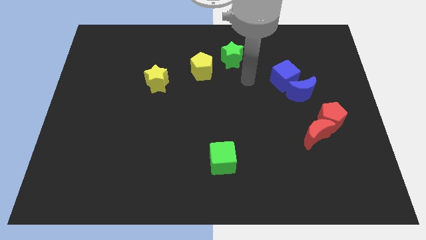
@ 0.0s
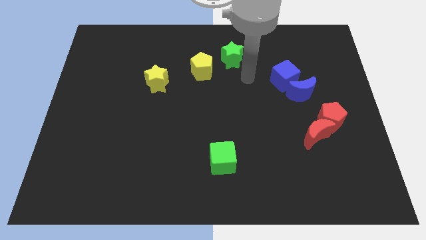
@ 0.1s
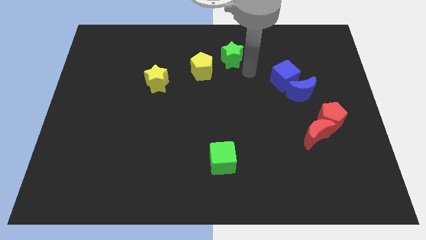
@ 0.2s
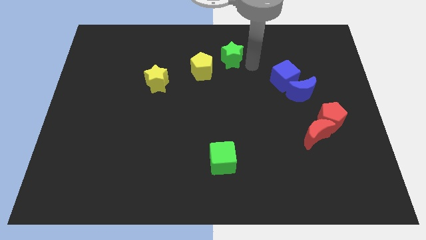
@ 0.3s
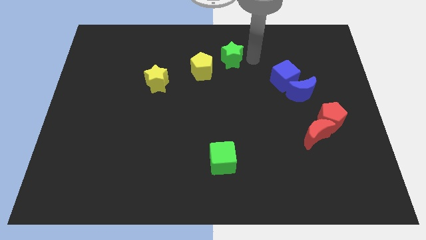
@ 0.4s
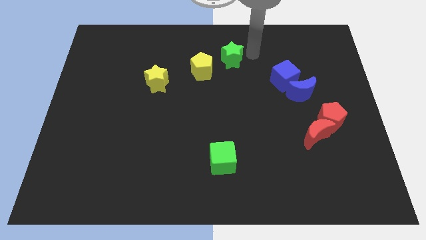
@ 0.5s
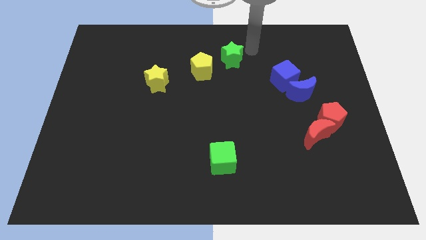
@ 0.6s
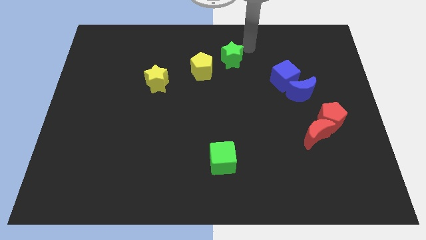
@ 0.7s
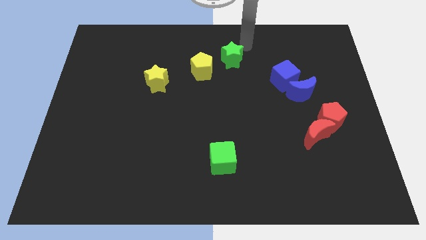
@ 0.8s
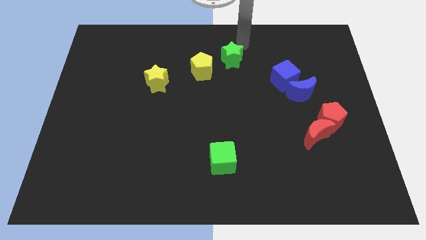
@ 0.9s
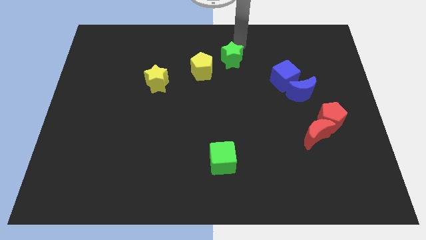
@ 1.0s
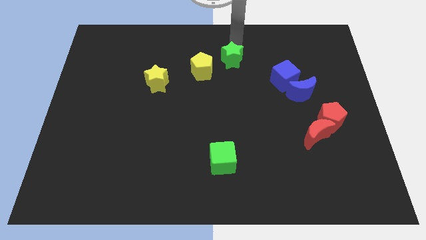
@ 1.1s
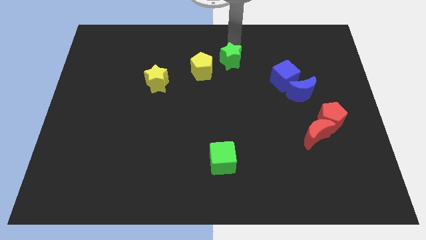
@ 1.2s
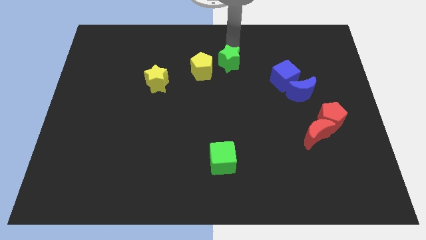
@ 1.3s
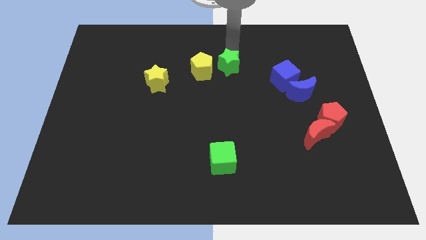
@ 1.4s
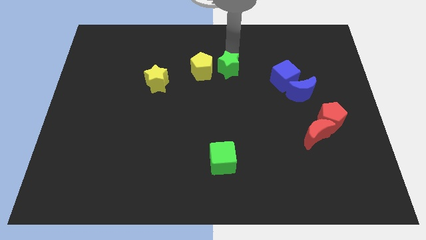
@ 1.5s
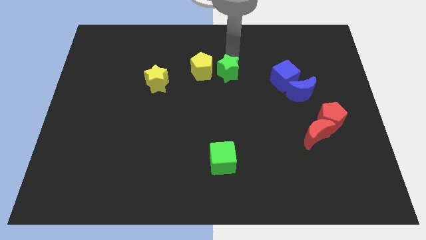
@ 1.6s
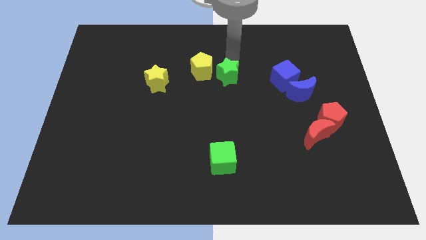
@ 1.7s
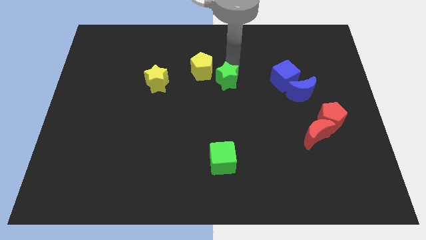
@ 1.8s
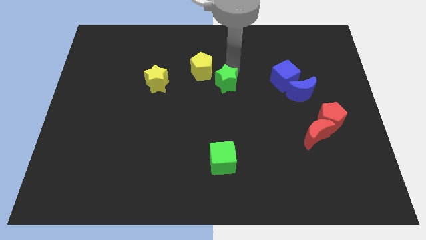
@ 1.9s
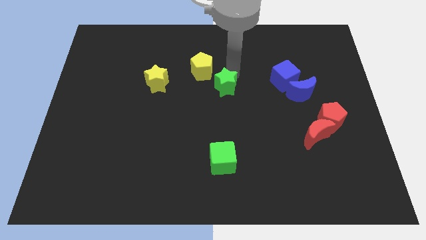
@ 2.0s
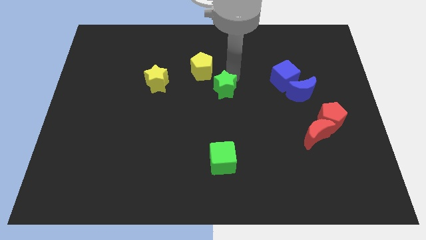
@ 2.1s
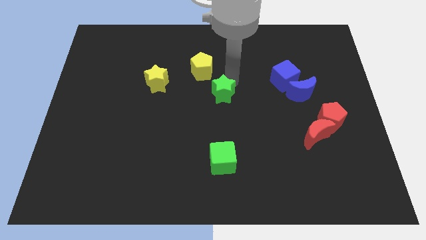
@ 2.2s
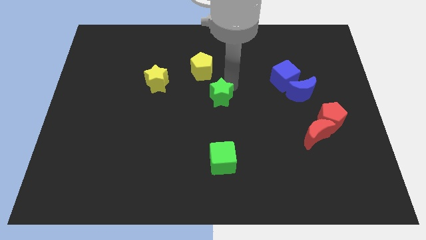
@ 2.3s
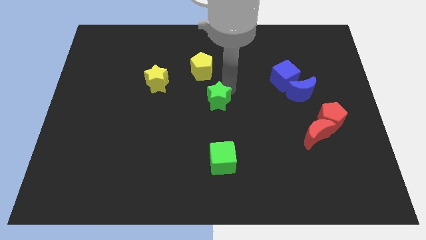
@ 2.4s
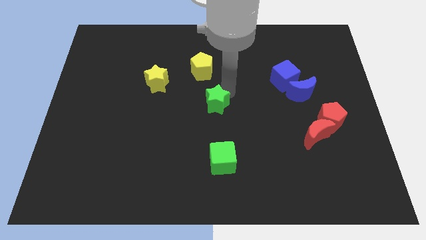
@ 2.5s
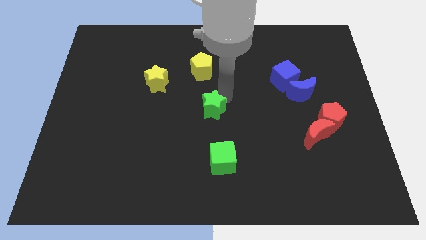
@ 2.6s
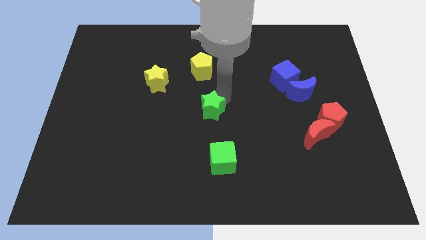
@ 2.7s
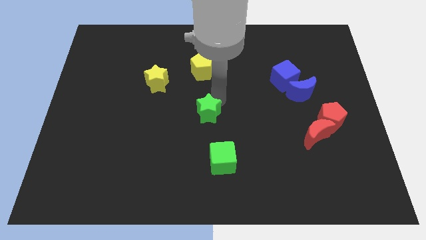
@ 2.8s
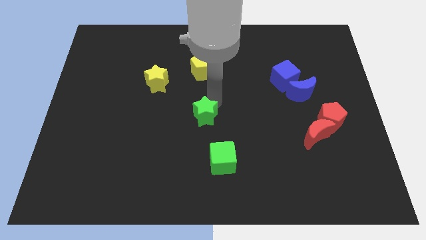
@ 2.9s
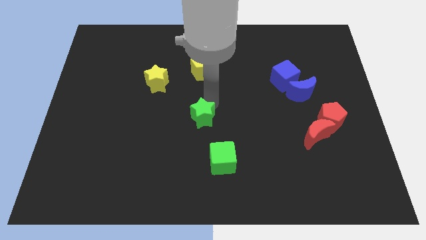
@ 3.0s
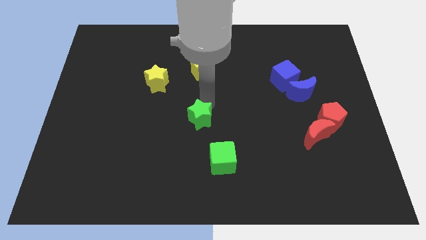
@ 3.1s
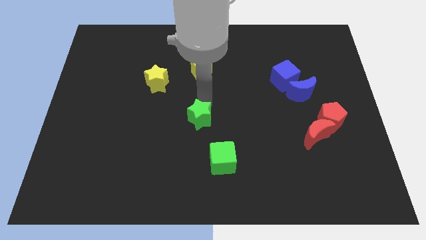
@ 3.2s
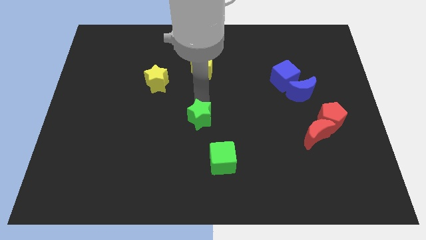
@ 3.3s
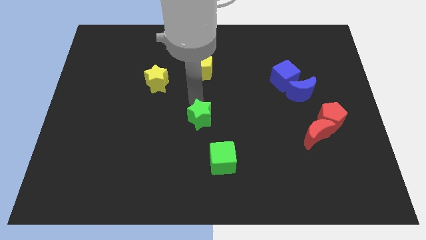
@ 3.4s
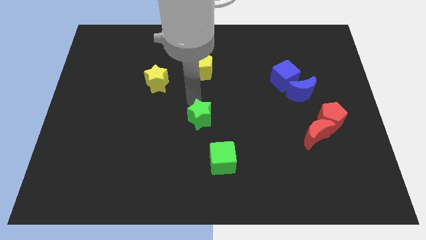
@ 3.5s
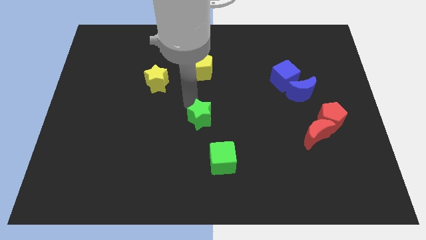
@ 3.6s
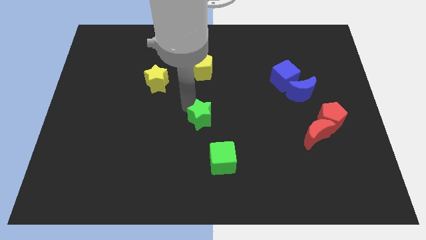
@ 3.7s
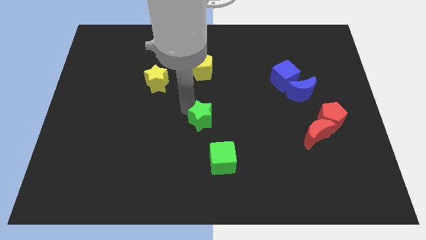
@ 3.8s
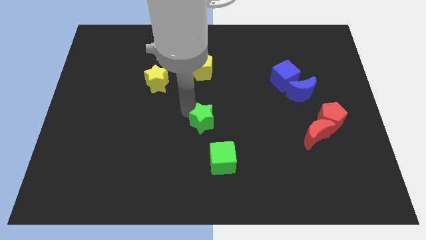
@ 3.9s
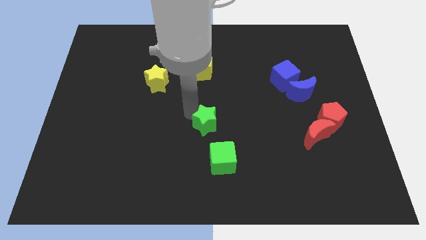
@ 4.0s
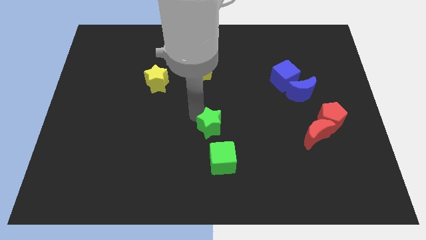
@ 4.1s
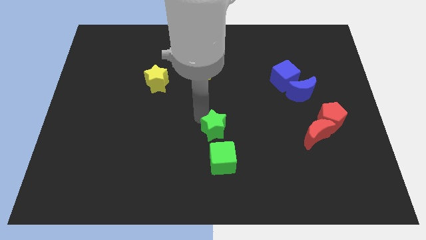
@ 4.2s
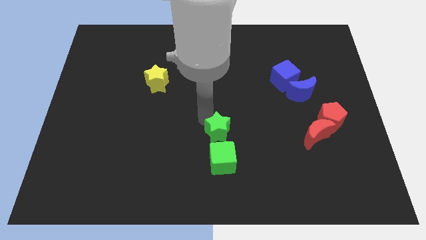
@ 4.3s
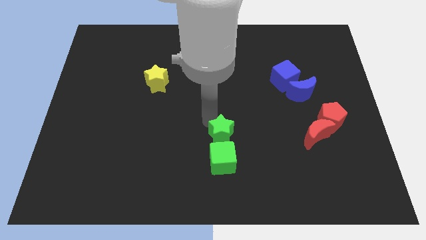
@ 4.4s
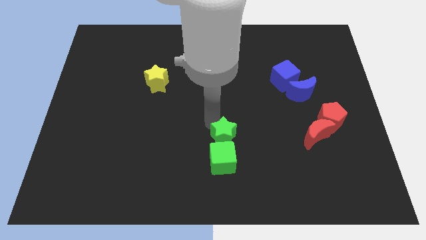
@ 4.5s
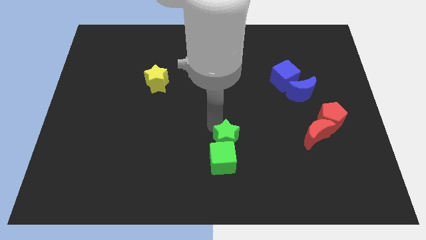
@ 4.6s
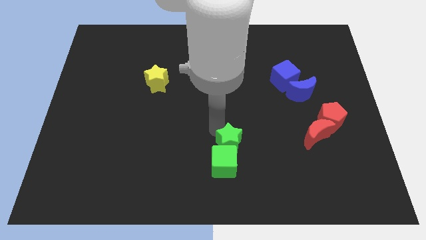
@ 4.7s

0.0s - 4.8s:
slide the green star next to the green cube

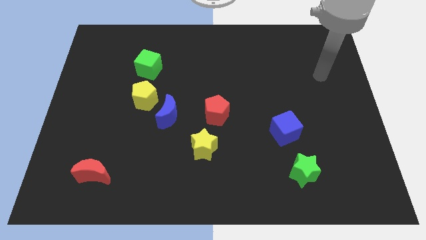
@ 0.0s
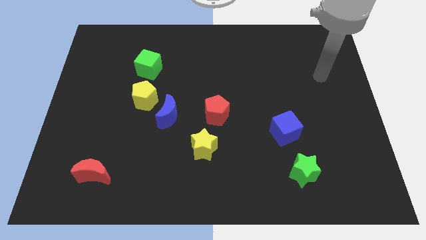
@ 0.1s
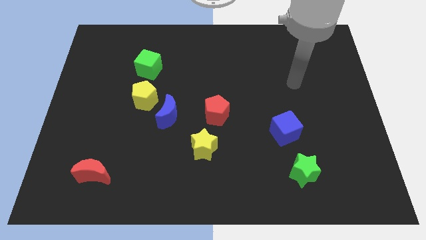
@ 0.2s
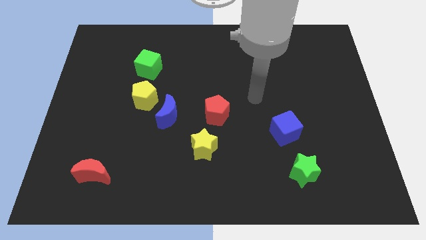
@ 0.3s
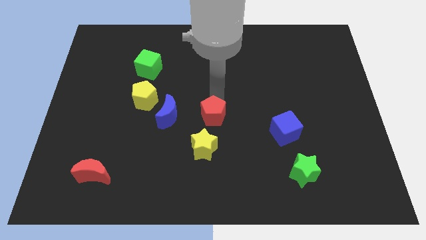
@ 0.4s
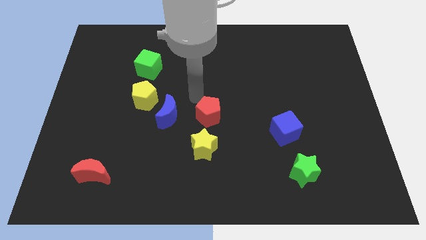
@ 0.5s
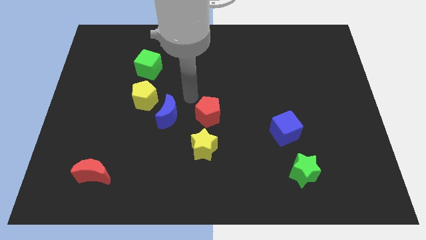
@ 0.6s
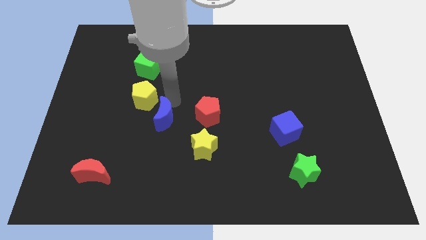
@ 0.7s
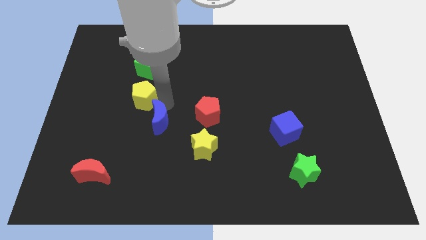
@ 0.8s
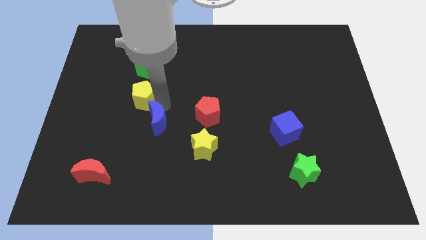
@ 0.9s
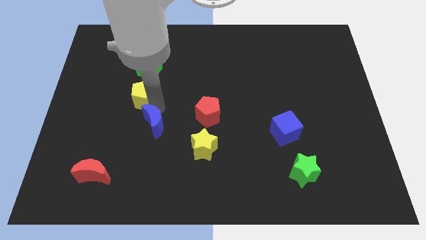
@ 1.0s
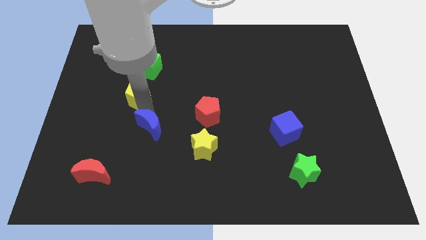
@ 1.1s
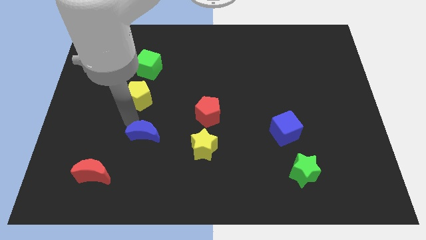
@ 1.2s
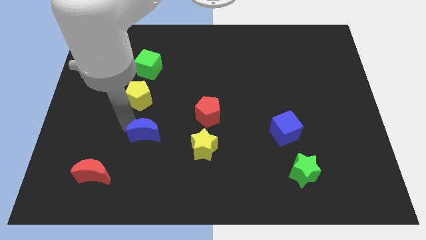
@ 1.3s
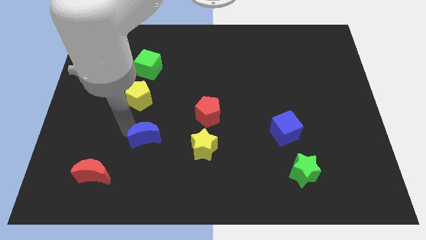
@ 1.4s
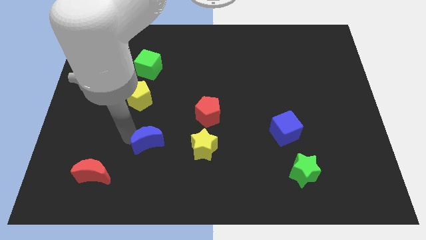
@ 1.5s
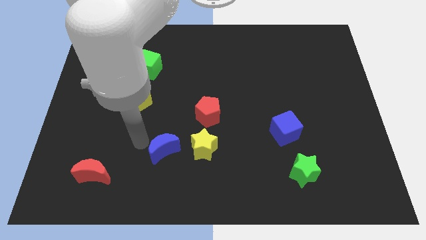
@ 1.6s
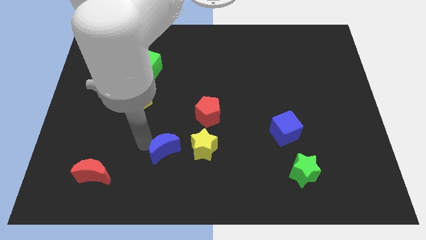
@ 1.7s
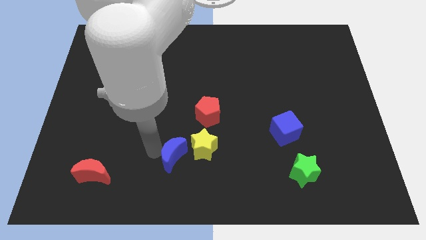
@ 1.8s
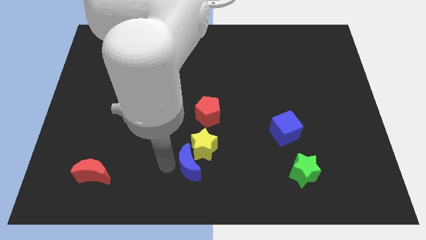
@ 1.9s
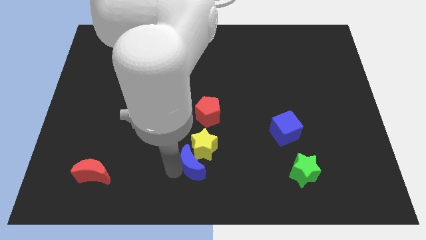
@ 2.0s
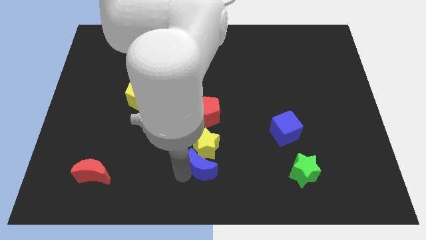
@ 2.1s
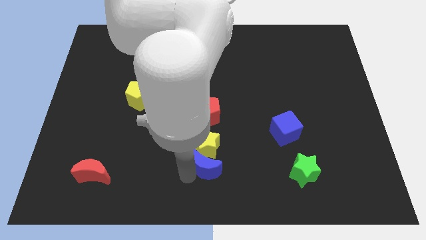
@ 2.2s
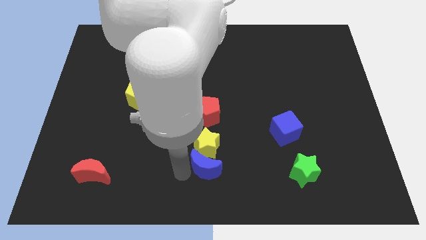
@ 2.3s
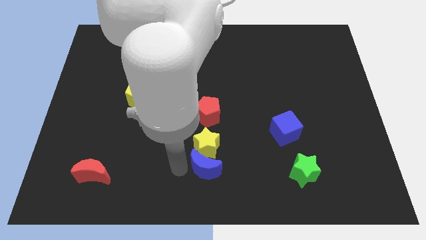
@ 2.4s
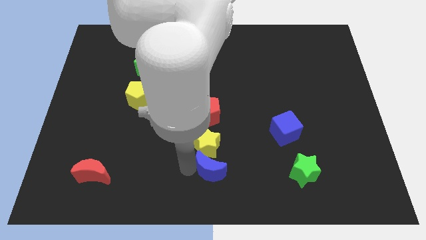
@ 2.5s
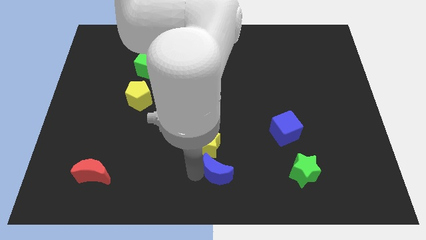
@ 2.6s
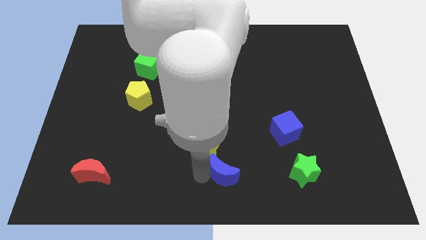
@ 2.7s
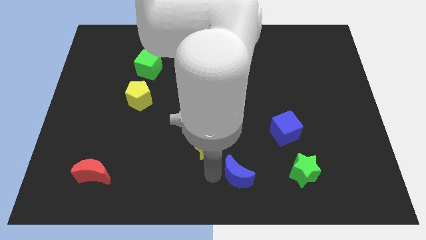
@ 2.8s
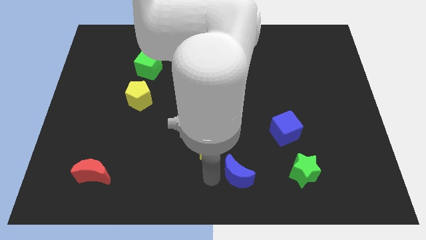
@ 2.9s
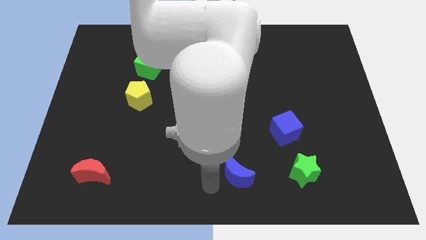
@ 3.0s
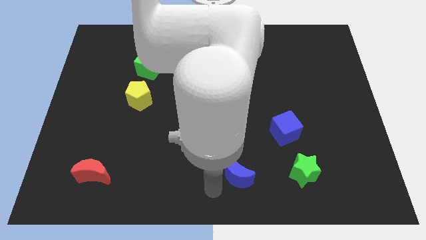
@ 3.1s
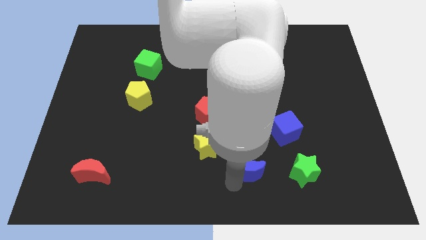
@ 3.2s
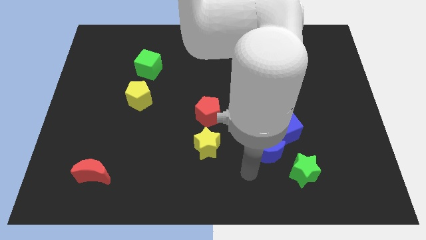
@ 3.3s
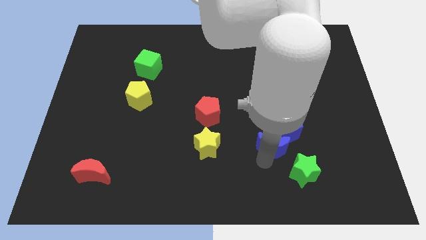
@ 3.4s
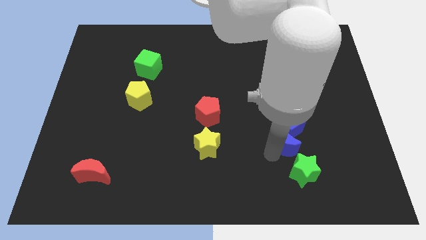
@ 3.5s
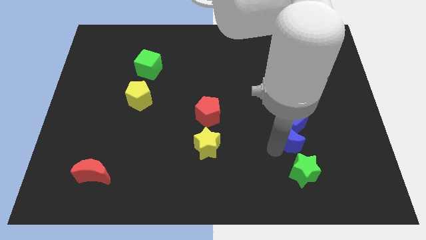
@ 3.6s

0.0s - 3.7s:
push the blue moon to the blue cube

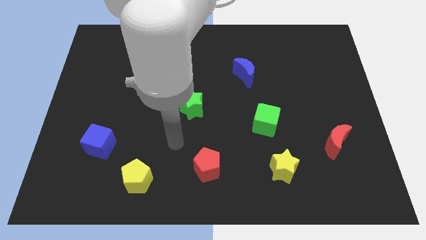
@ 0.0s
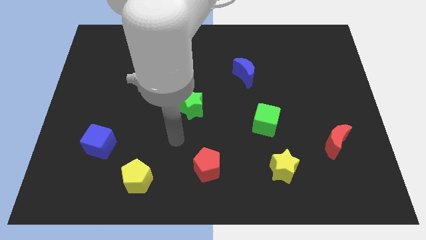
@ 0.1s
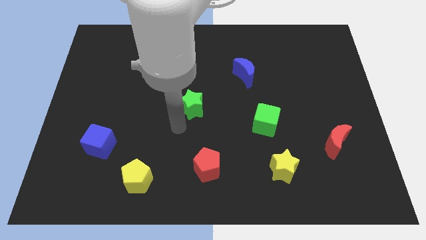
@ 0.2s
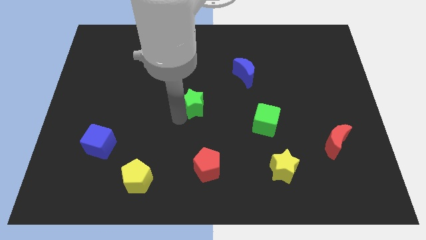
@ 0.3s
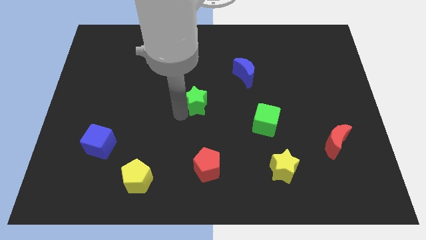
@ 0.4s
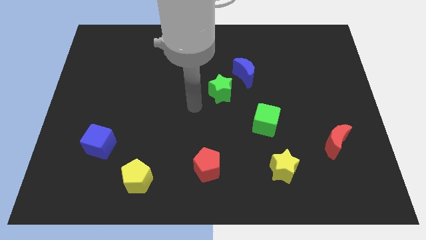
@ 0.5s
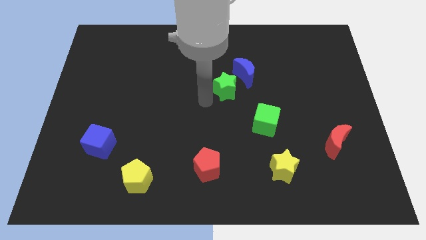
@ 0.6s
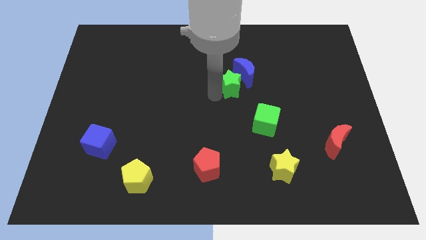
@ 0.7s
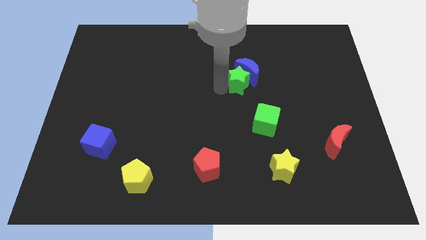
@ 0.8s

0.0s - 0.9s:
move the green star close to the blue moon
